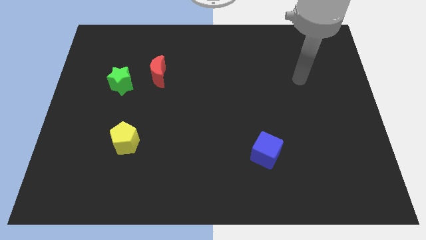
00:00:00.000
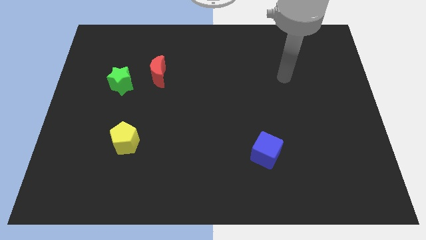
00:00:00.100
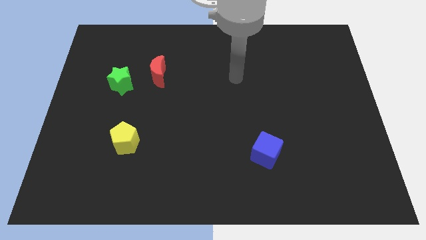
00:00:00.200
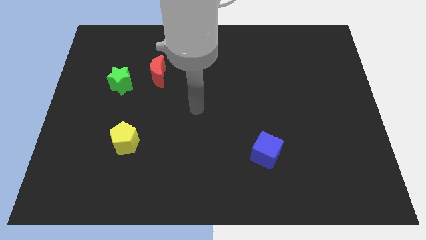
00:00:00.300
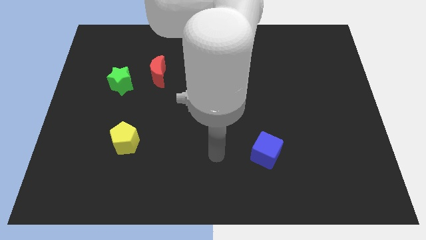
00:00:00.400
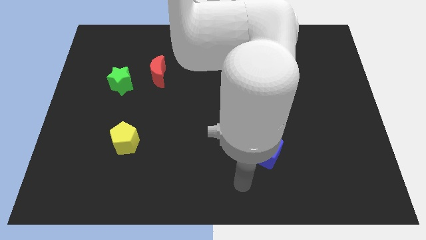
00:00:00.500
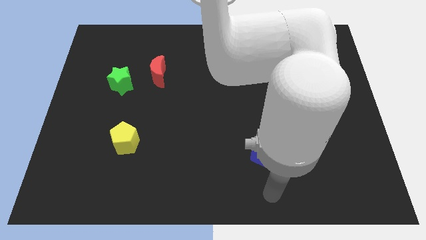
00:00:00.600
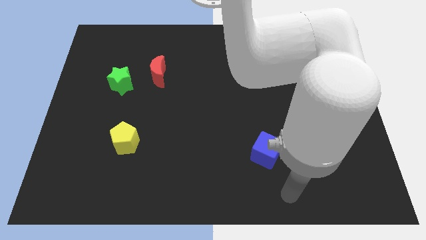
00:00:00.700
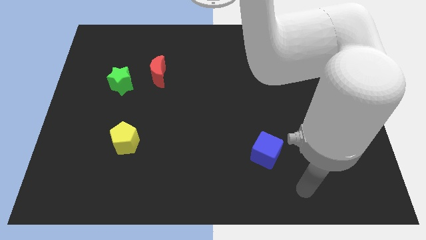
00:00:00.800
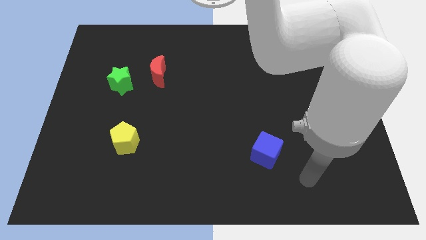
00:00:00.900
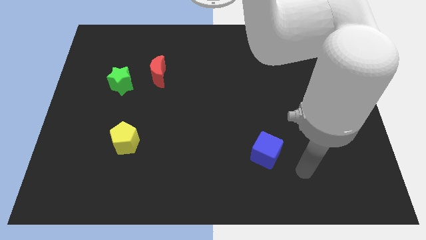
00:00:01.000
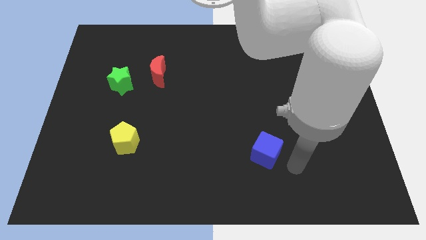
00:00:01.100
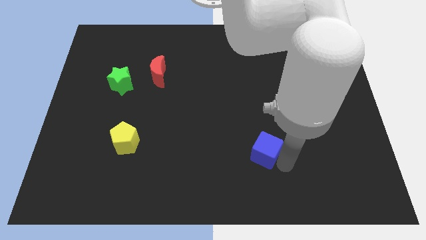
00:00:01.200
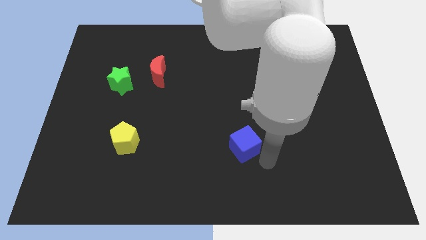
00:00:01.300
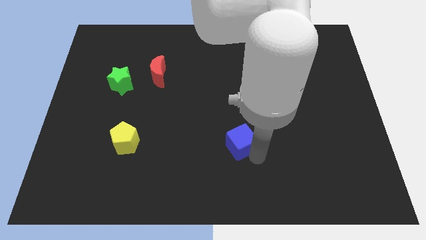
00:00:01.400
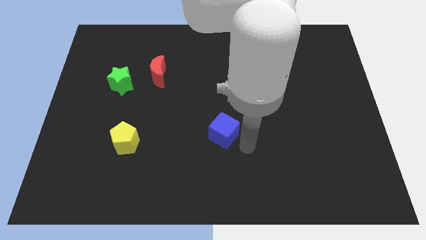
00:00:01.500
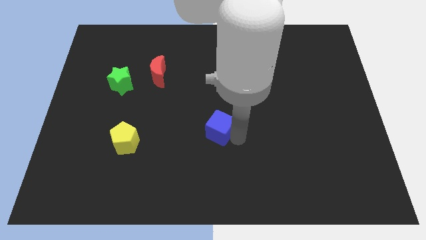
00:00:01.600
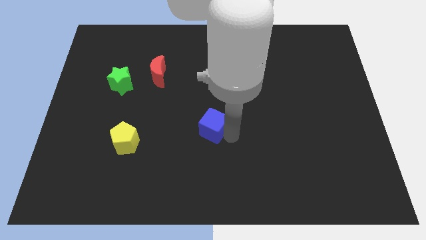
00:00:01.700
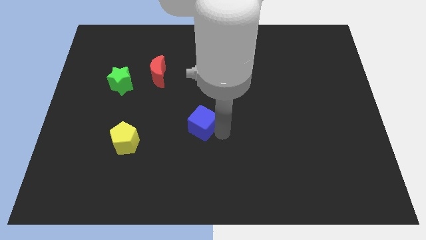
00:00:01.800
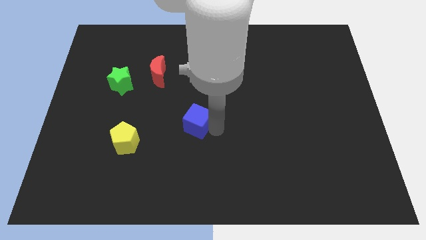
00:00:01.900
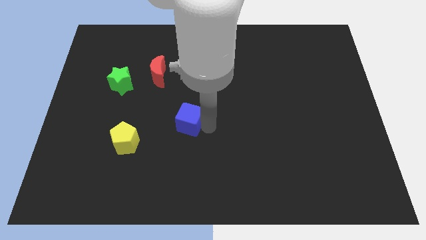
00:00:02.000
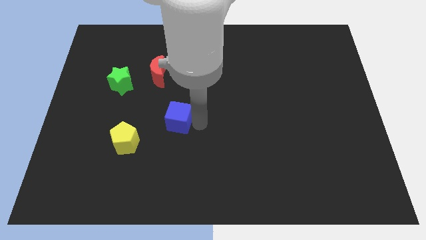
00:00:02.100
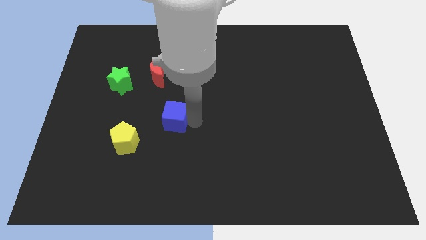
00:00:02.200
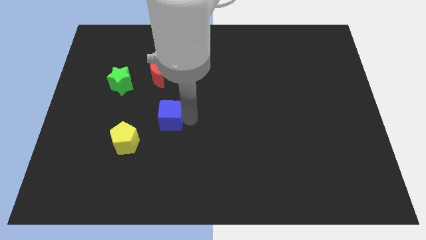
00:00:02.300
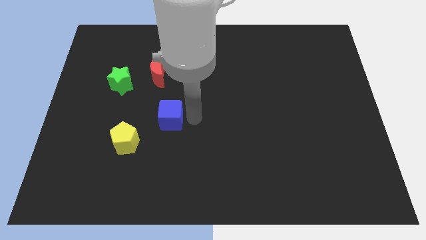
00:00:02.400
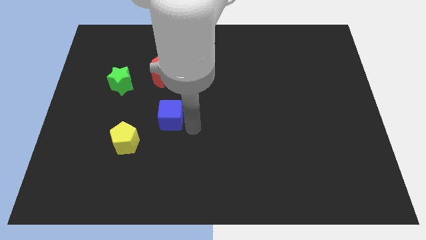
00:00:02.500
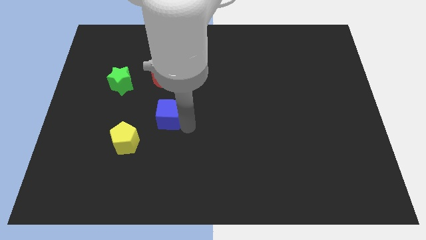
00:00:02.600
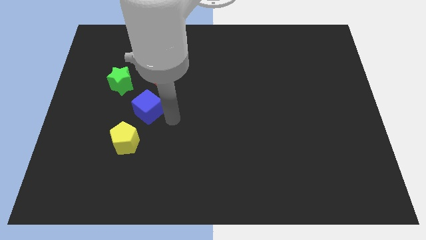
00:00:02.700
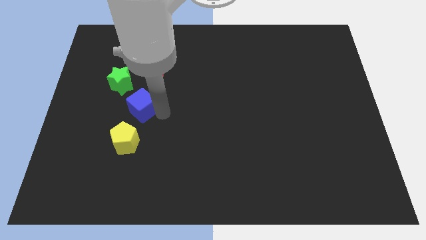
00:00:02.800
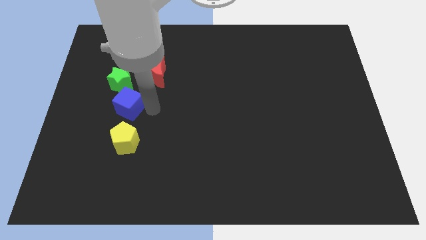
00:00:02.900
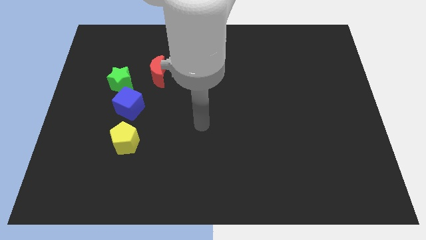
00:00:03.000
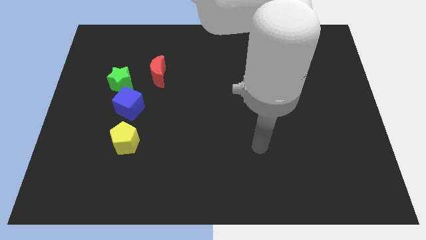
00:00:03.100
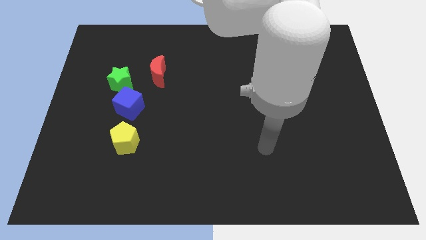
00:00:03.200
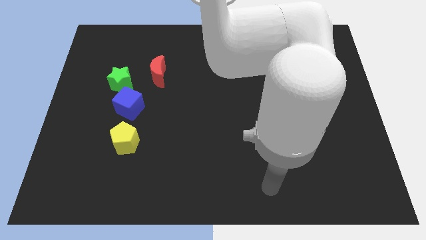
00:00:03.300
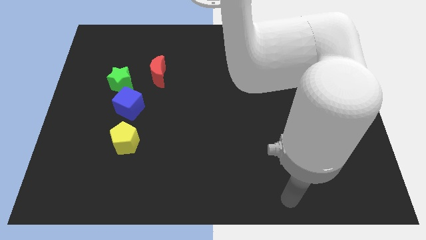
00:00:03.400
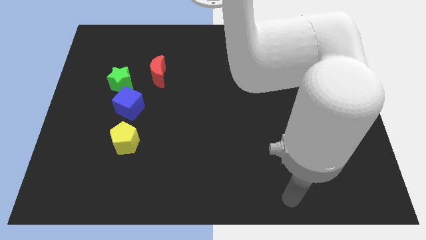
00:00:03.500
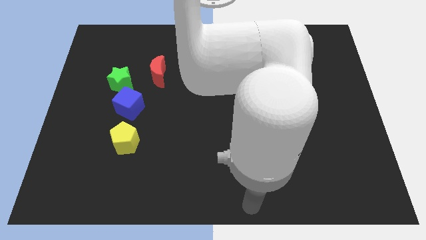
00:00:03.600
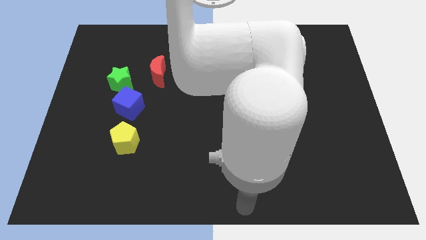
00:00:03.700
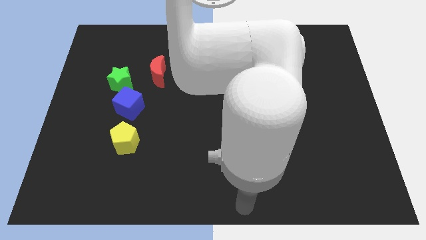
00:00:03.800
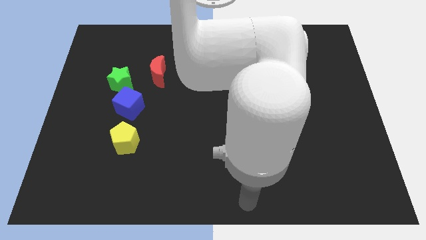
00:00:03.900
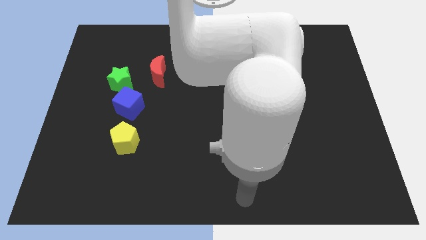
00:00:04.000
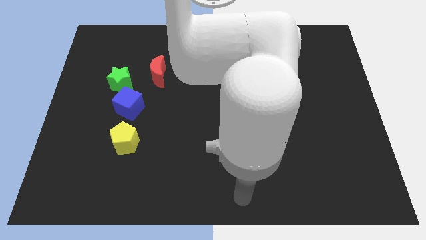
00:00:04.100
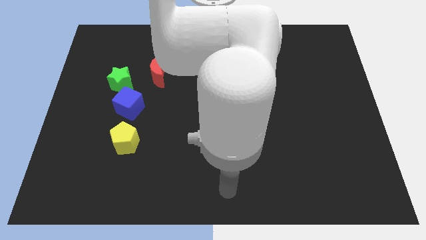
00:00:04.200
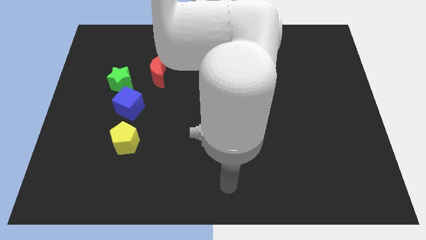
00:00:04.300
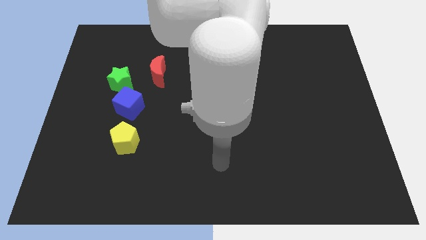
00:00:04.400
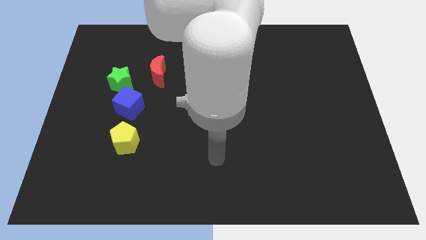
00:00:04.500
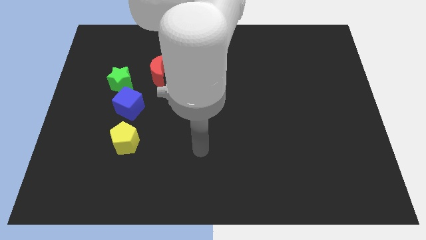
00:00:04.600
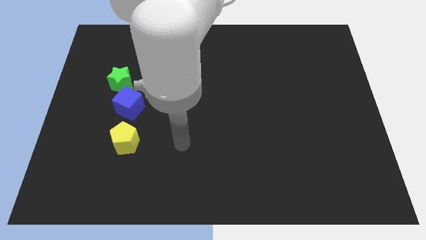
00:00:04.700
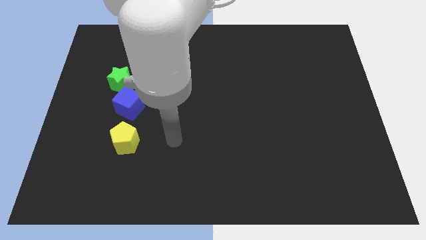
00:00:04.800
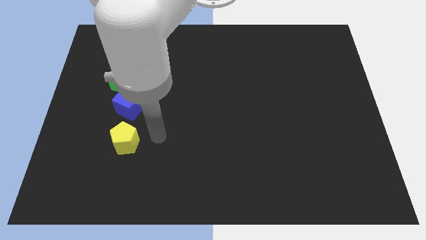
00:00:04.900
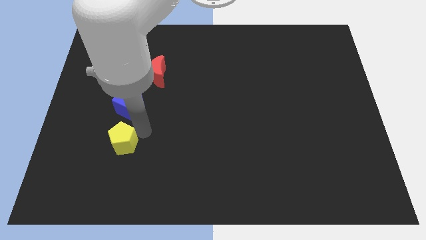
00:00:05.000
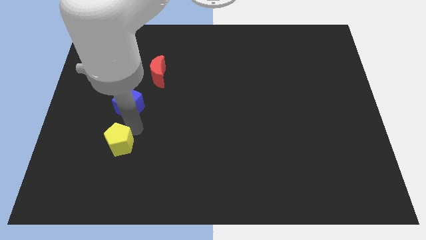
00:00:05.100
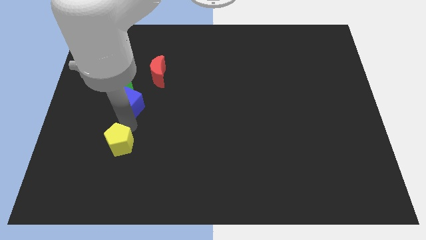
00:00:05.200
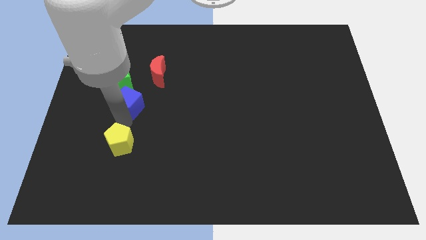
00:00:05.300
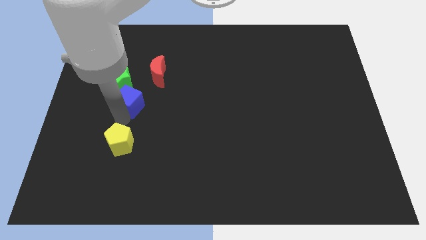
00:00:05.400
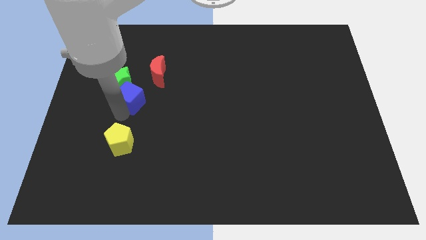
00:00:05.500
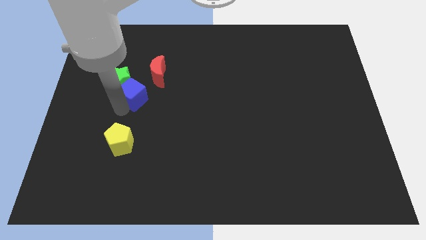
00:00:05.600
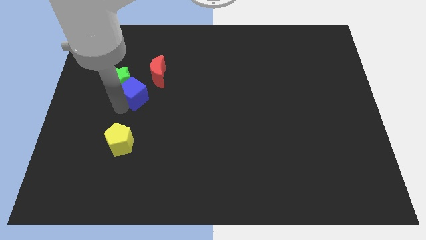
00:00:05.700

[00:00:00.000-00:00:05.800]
slide the cube next to the star

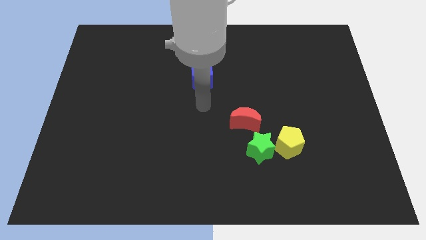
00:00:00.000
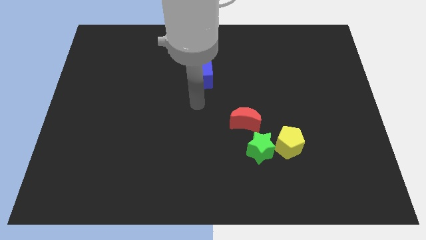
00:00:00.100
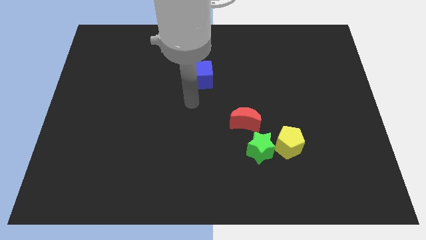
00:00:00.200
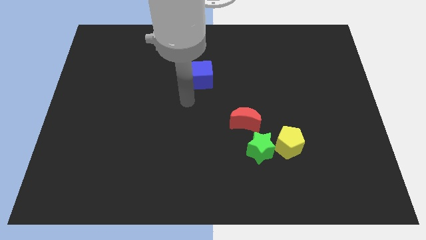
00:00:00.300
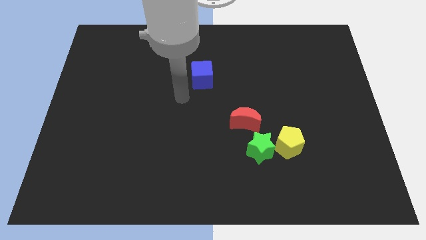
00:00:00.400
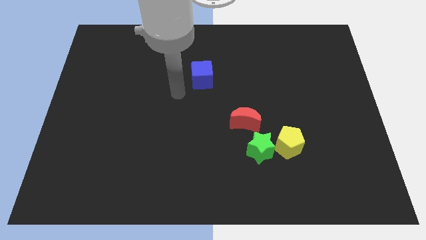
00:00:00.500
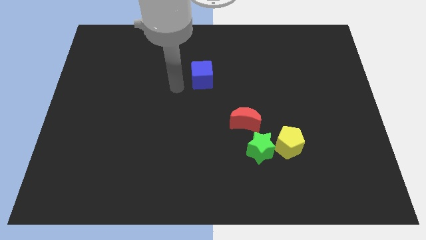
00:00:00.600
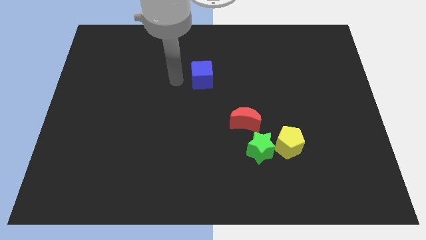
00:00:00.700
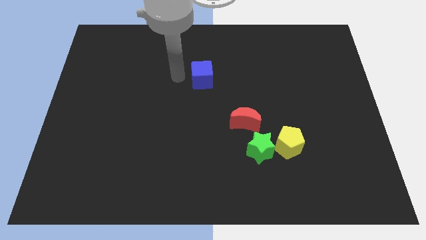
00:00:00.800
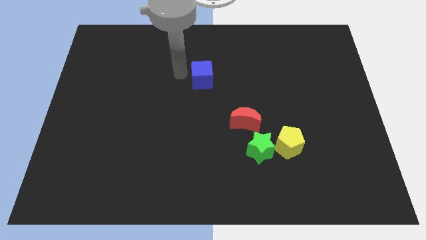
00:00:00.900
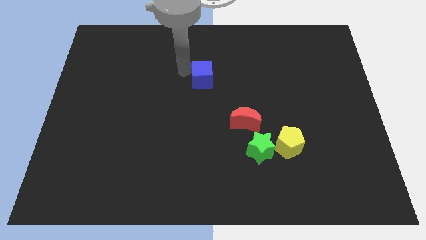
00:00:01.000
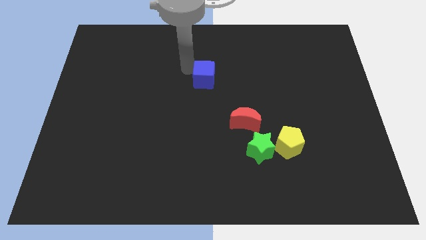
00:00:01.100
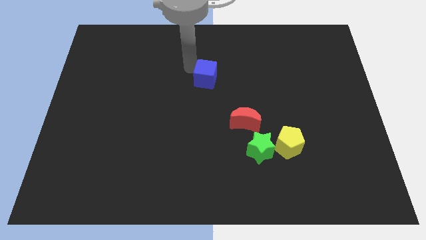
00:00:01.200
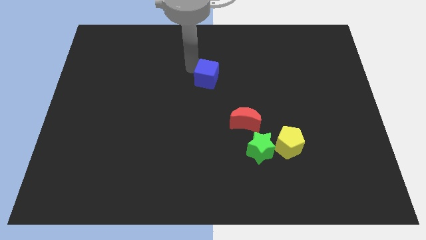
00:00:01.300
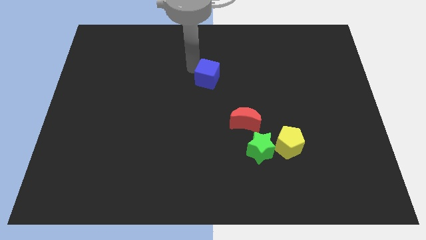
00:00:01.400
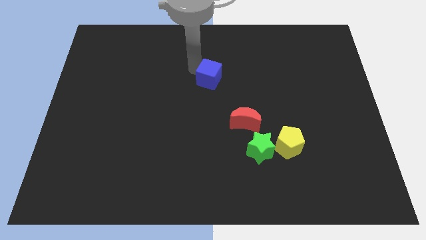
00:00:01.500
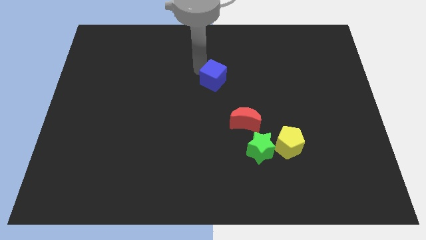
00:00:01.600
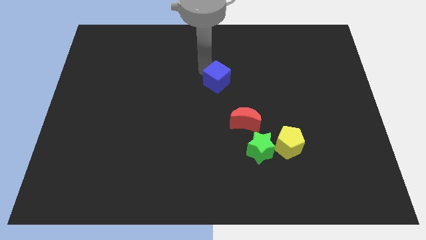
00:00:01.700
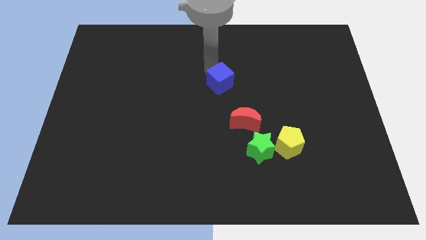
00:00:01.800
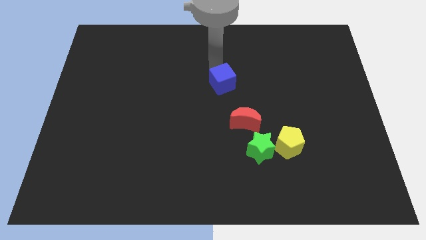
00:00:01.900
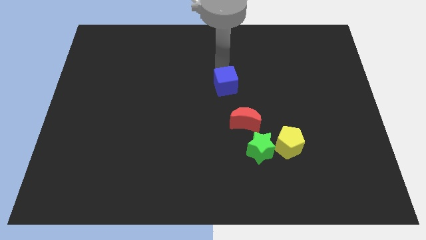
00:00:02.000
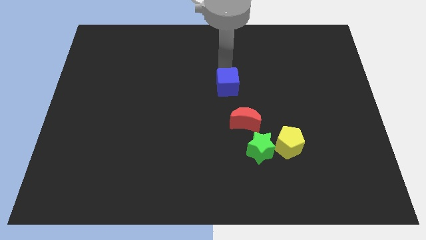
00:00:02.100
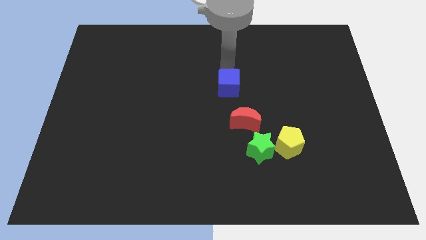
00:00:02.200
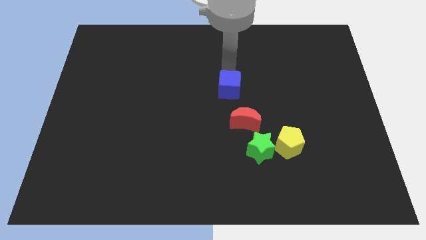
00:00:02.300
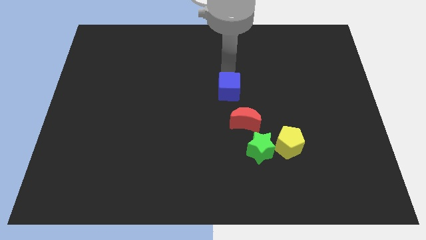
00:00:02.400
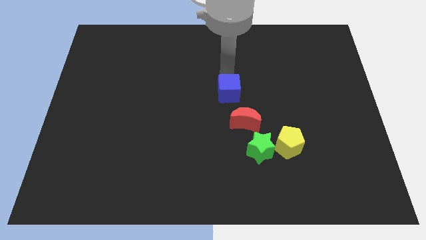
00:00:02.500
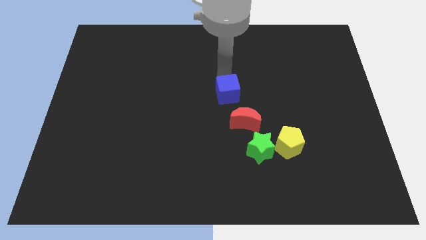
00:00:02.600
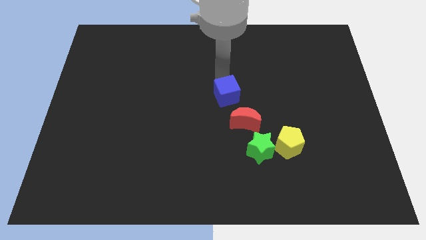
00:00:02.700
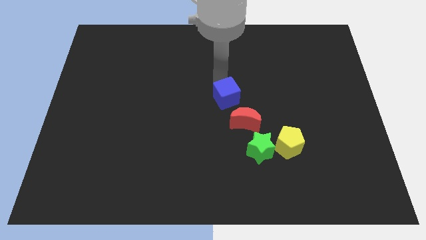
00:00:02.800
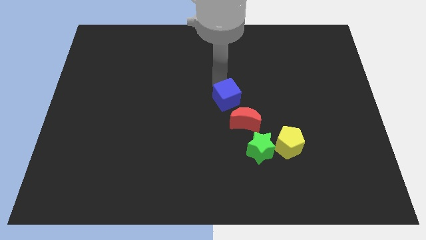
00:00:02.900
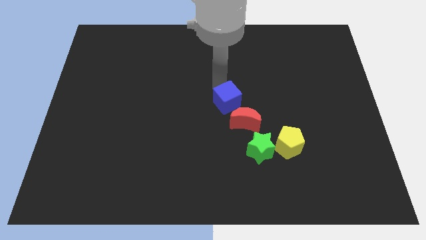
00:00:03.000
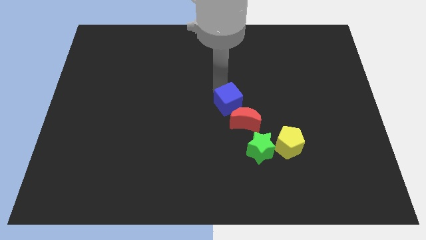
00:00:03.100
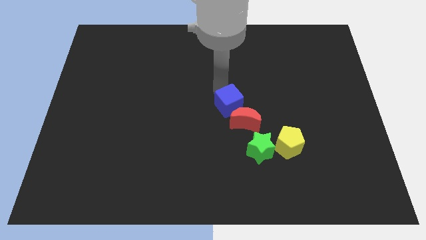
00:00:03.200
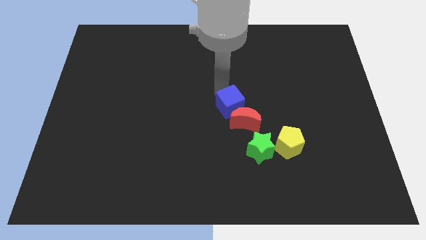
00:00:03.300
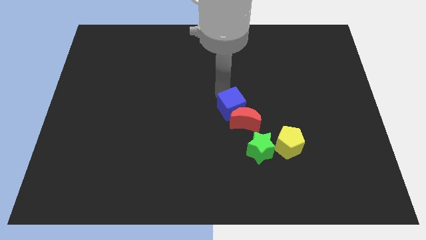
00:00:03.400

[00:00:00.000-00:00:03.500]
push the blue cube towards the red block
